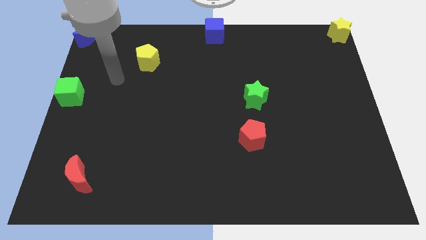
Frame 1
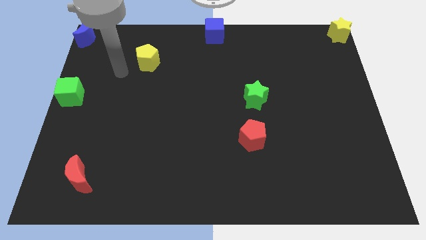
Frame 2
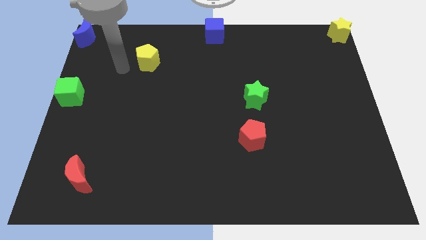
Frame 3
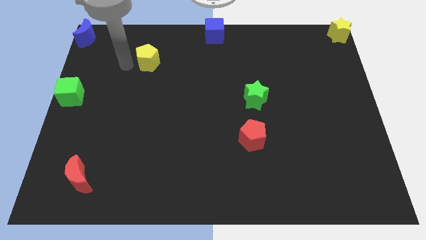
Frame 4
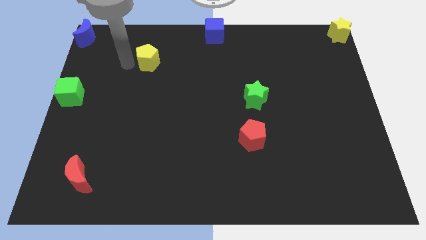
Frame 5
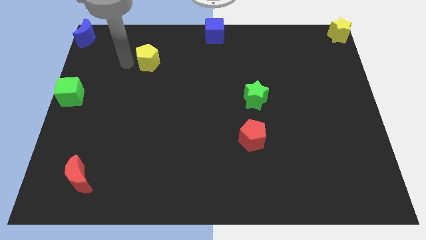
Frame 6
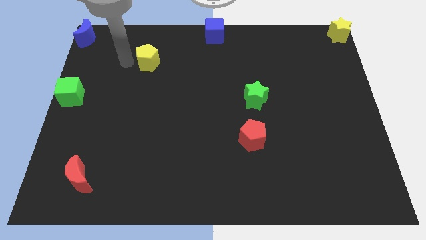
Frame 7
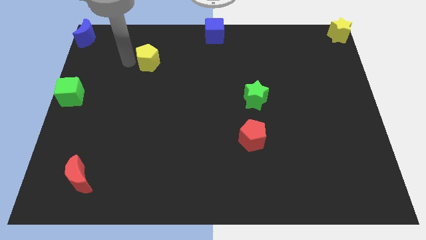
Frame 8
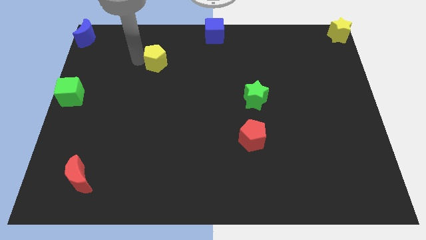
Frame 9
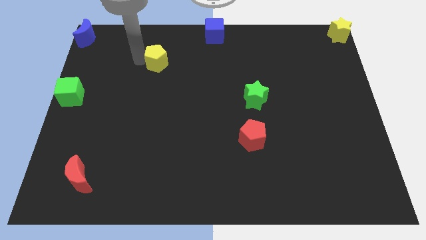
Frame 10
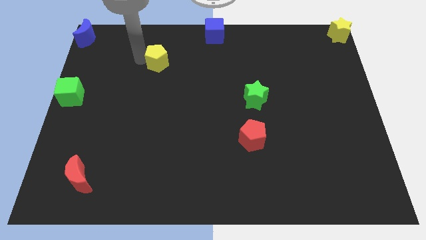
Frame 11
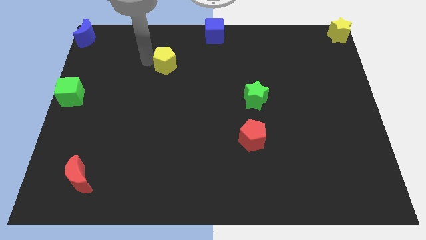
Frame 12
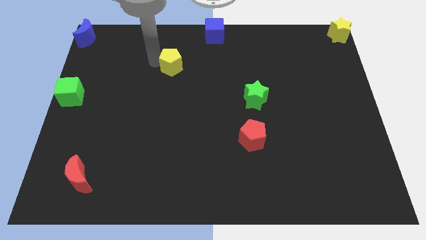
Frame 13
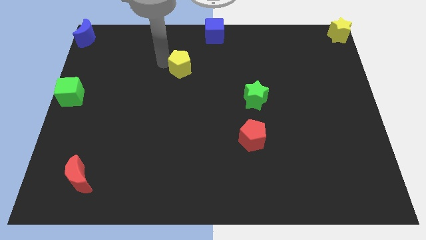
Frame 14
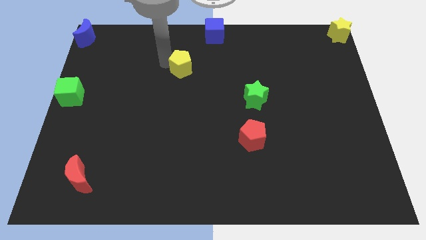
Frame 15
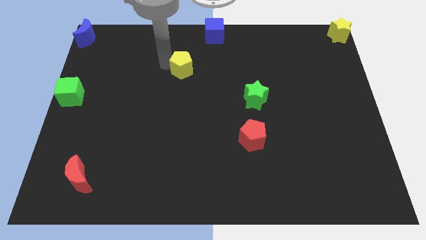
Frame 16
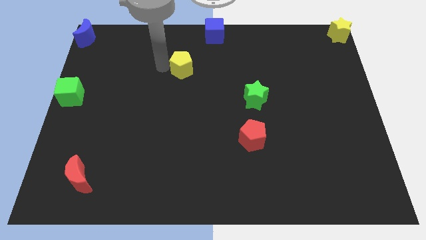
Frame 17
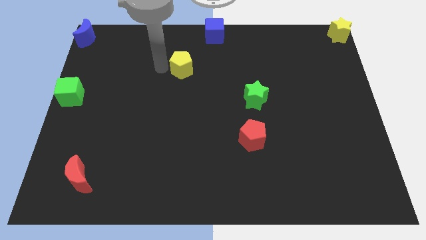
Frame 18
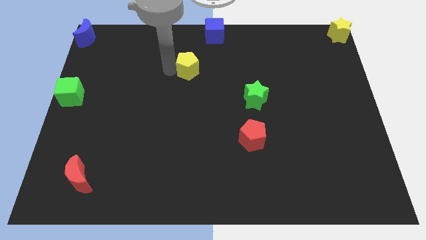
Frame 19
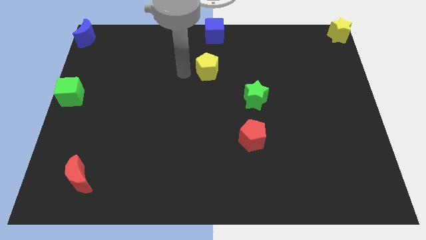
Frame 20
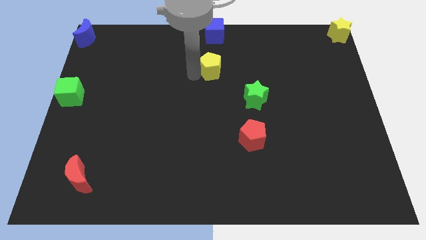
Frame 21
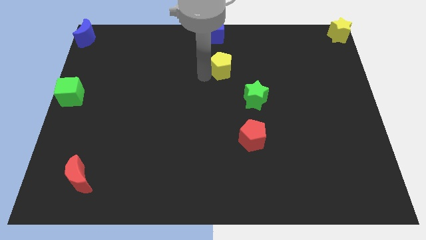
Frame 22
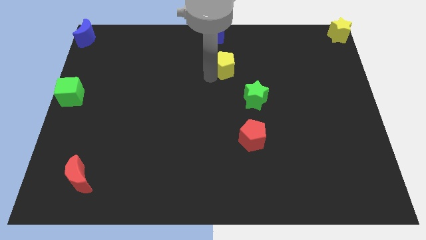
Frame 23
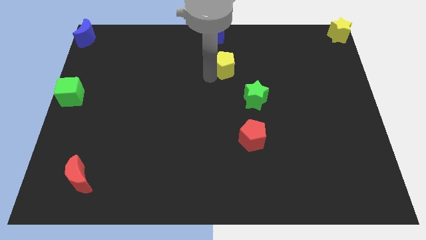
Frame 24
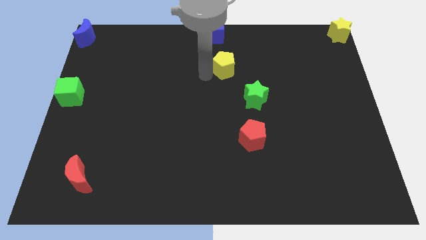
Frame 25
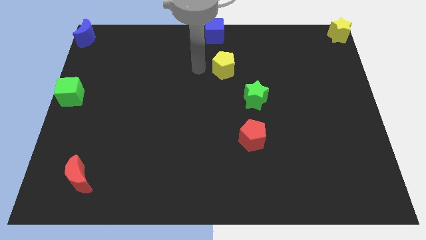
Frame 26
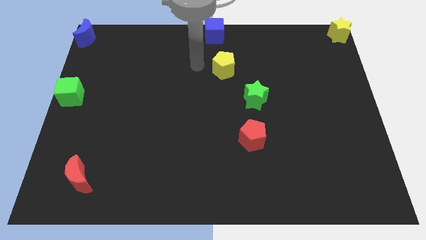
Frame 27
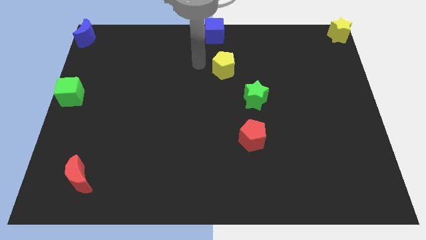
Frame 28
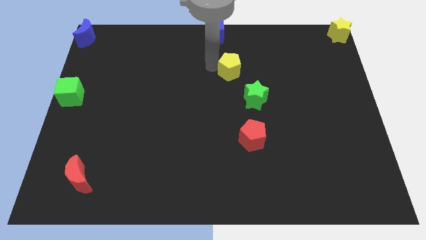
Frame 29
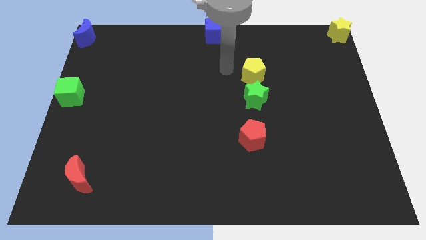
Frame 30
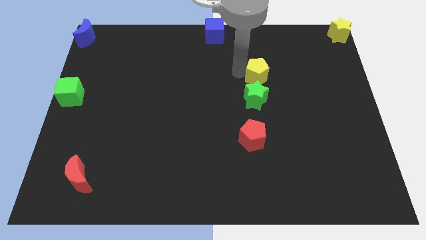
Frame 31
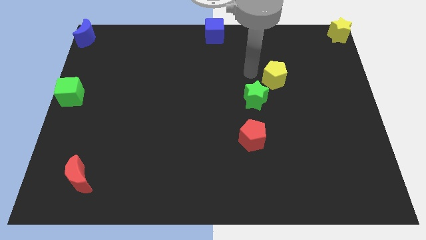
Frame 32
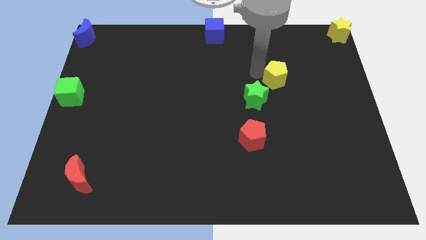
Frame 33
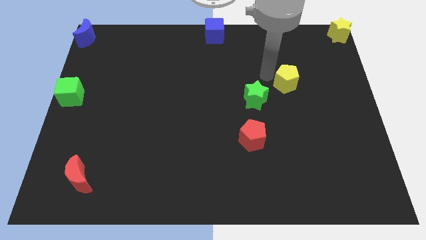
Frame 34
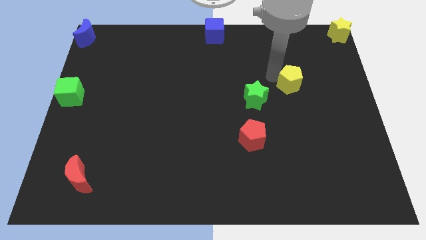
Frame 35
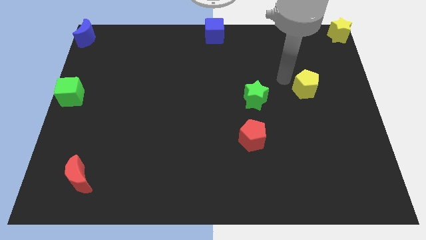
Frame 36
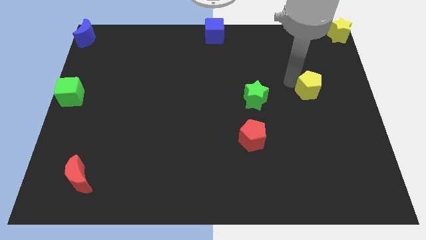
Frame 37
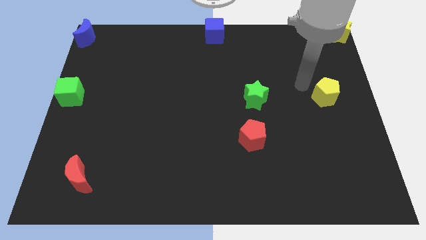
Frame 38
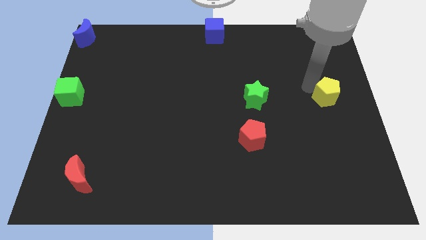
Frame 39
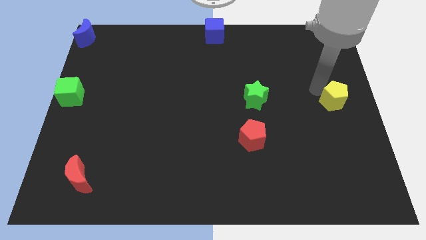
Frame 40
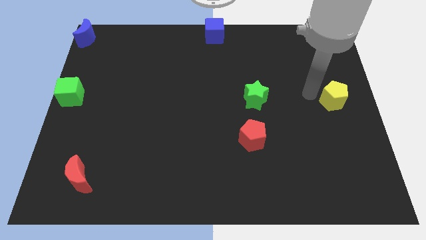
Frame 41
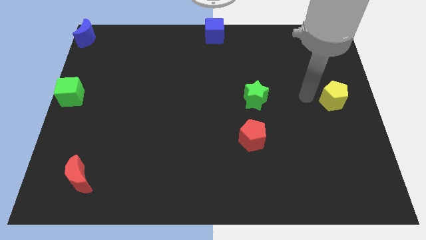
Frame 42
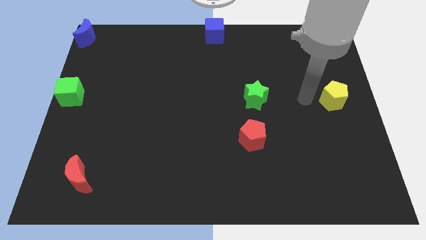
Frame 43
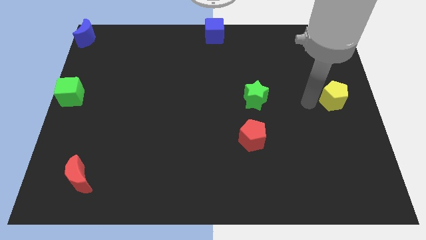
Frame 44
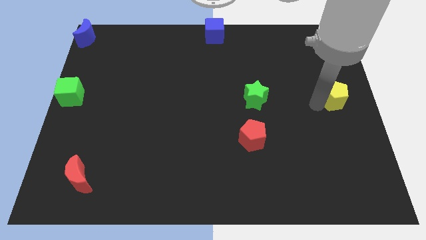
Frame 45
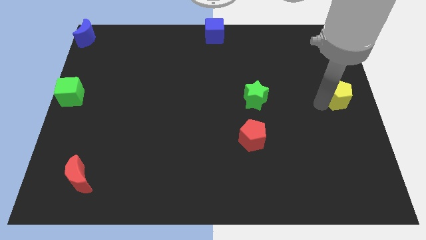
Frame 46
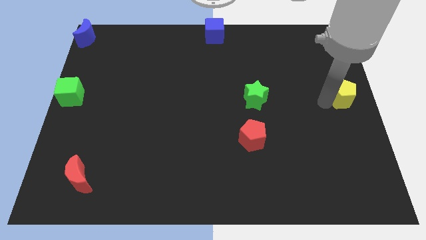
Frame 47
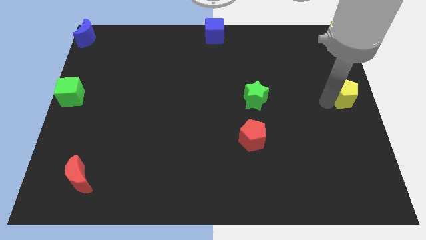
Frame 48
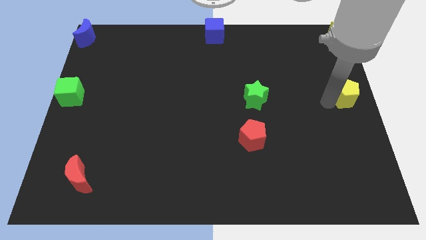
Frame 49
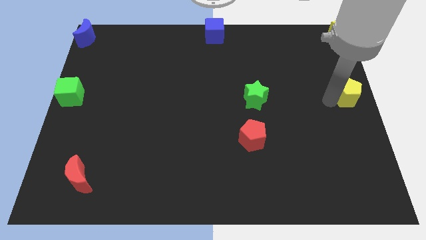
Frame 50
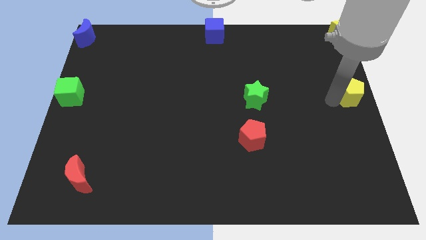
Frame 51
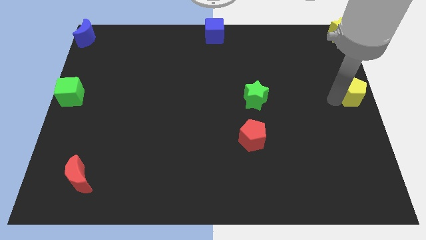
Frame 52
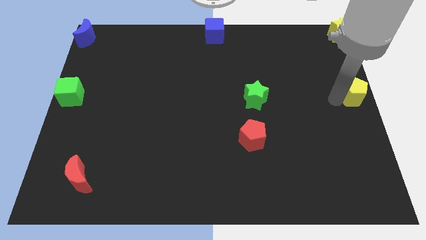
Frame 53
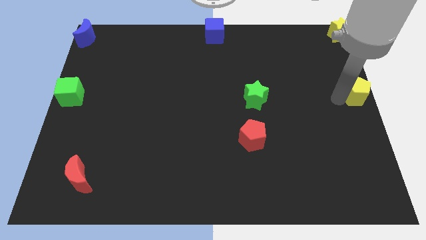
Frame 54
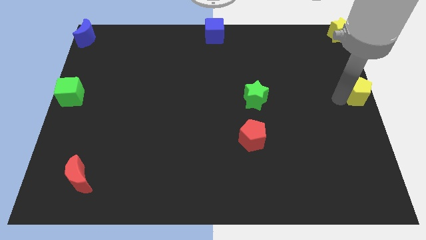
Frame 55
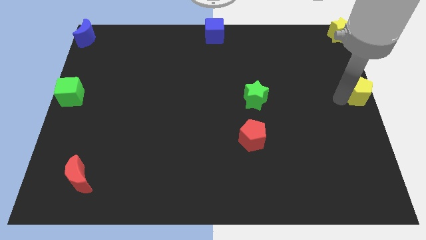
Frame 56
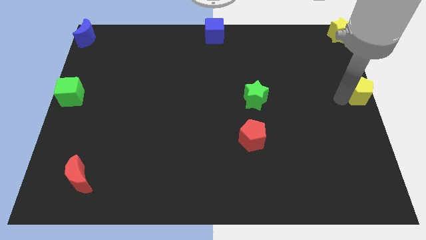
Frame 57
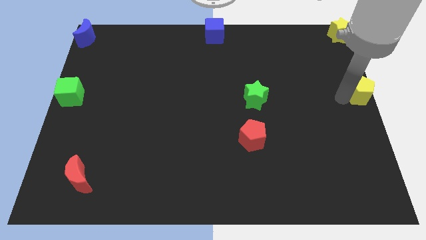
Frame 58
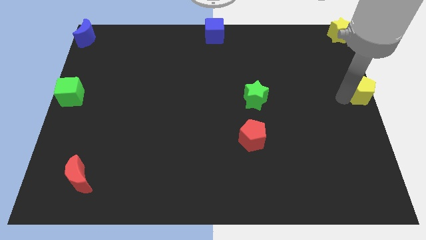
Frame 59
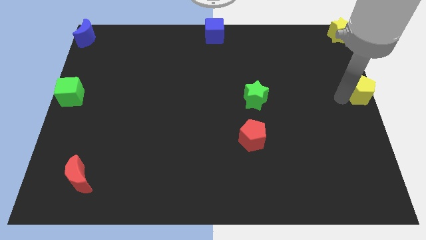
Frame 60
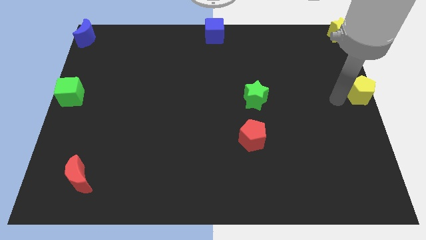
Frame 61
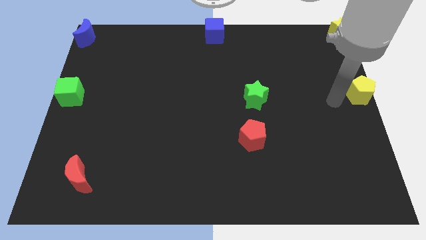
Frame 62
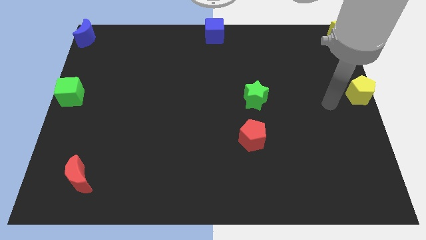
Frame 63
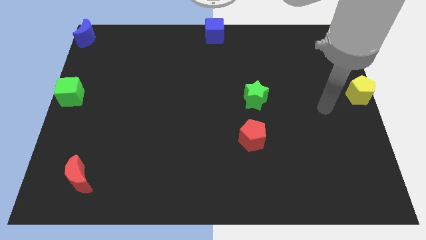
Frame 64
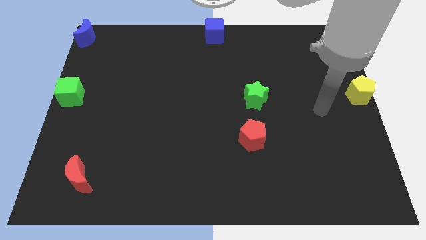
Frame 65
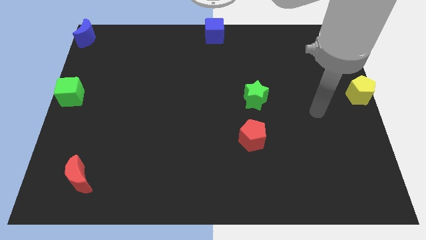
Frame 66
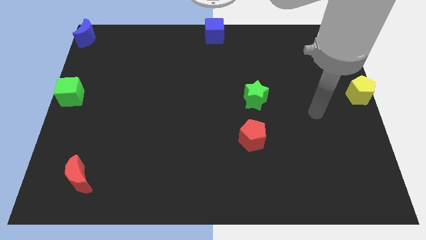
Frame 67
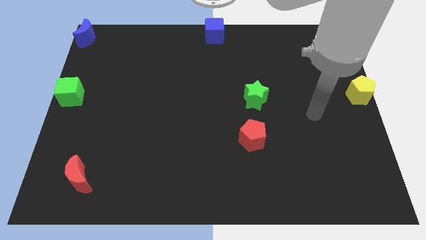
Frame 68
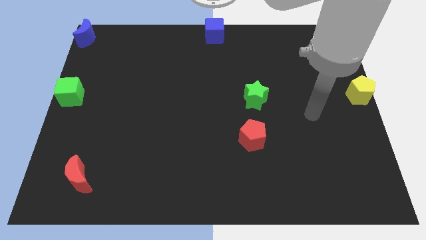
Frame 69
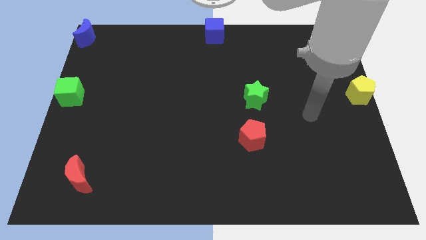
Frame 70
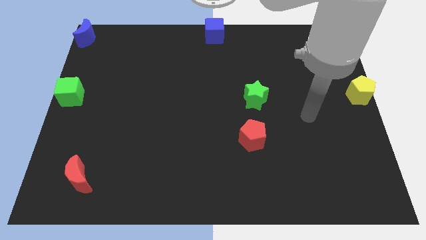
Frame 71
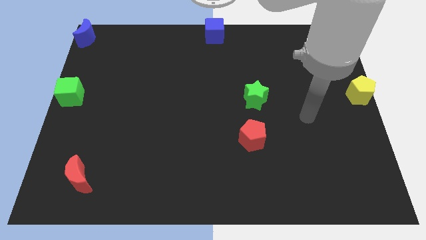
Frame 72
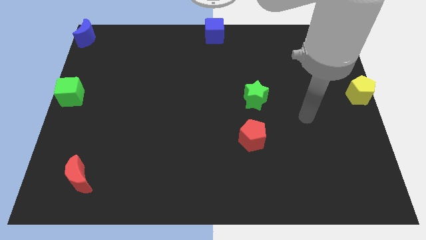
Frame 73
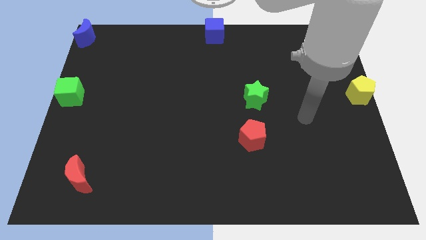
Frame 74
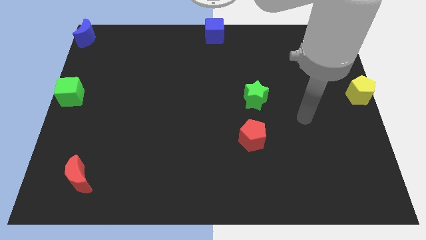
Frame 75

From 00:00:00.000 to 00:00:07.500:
move the yellow pentagon to the right middle of the board

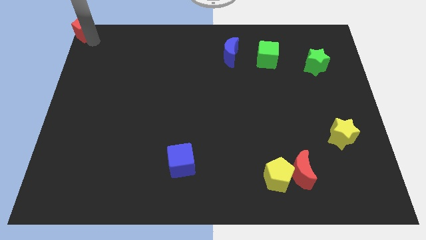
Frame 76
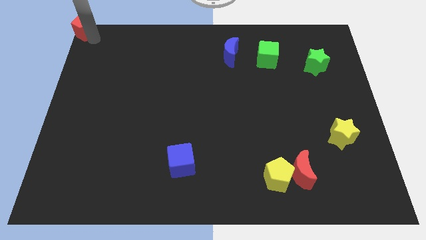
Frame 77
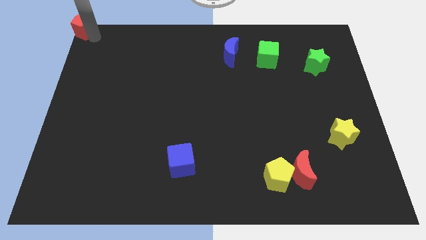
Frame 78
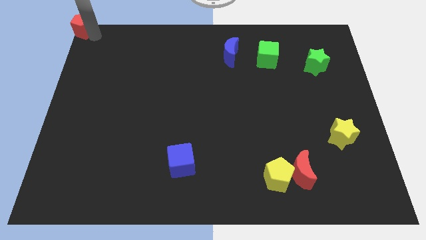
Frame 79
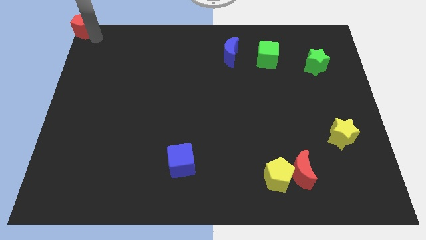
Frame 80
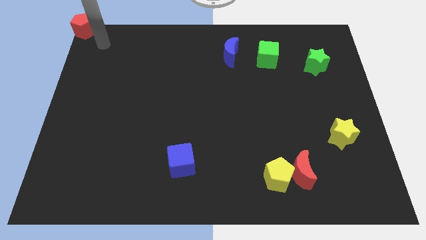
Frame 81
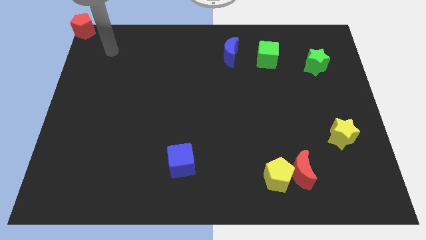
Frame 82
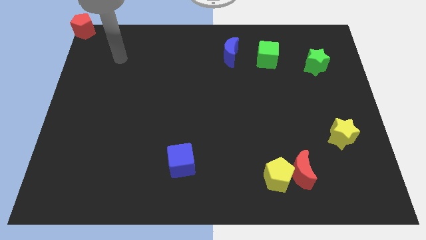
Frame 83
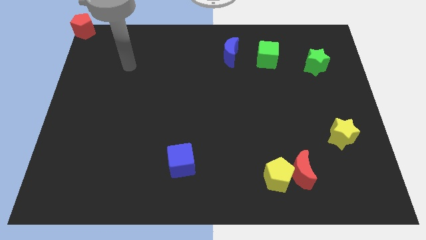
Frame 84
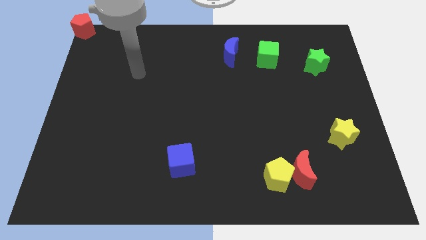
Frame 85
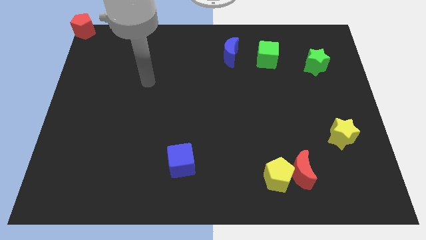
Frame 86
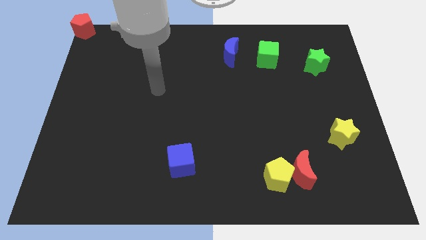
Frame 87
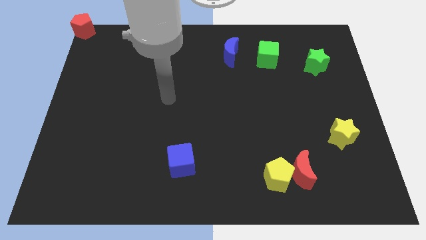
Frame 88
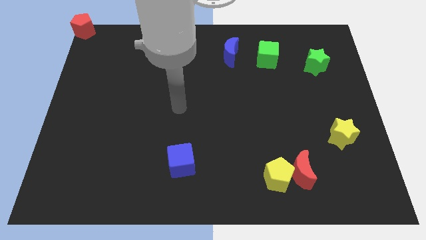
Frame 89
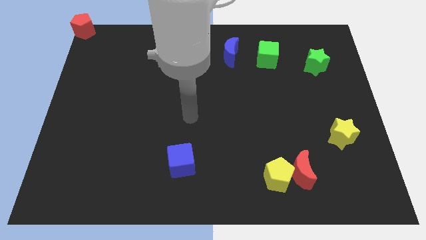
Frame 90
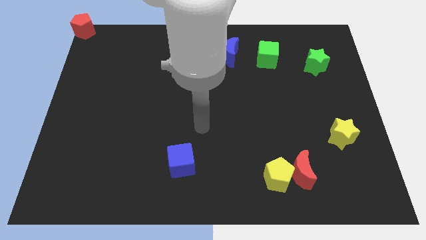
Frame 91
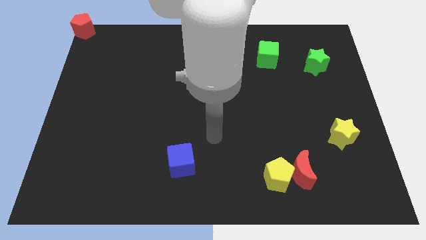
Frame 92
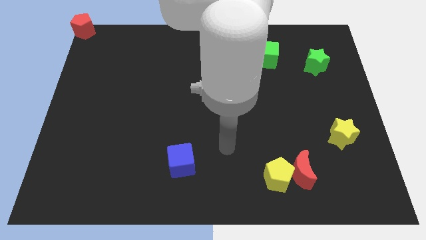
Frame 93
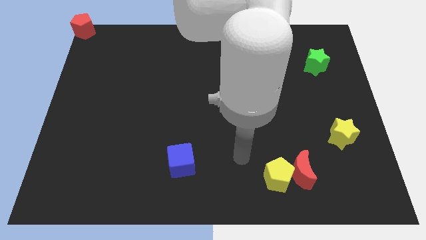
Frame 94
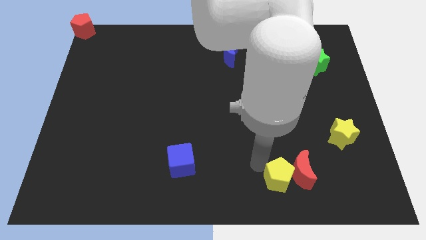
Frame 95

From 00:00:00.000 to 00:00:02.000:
place your arm to the top left side of the yellow pentagon
